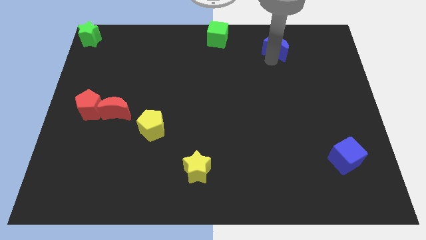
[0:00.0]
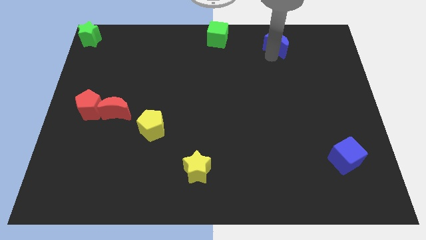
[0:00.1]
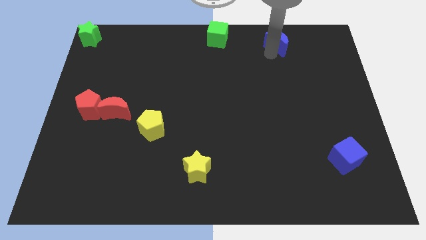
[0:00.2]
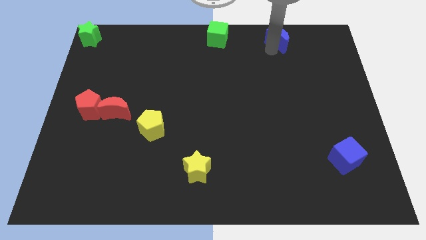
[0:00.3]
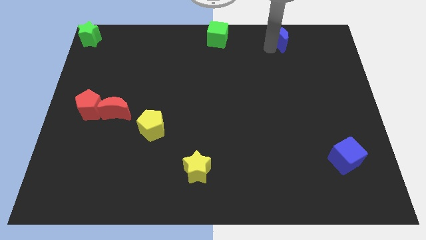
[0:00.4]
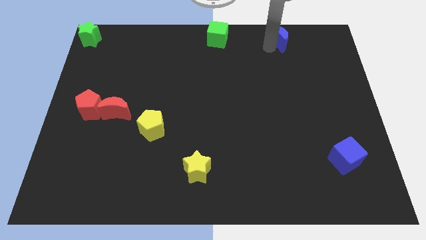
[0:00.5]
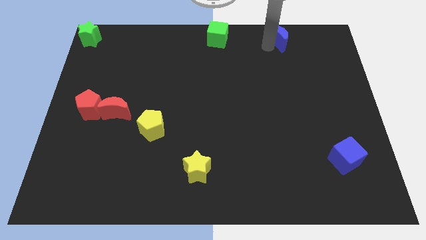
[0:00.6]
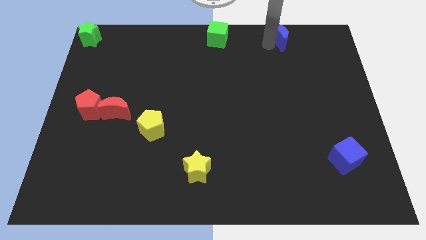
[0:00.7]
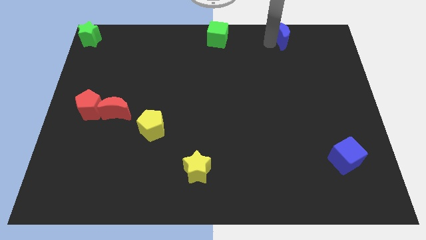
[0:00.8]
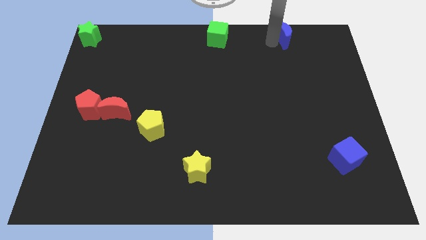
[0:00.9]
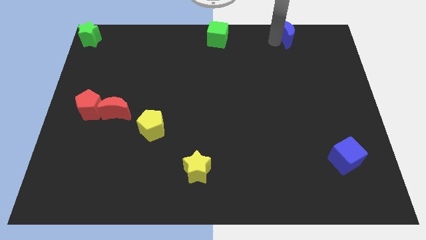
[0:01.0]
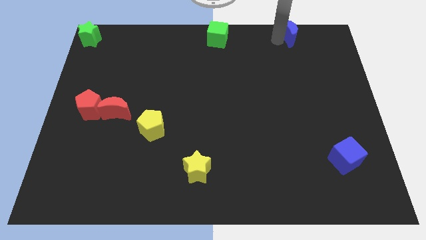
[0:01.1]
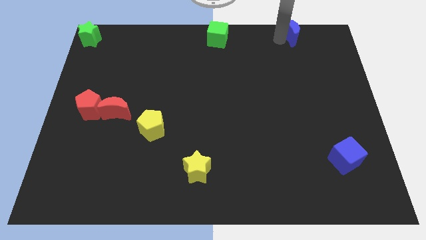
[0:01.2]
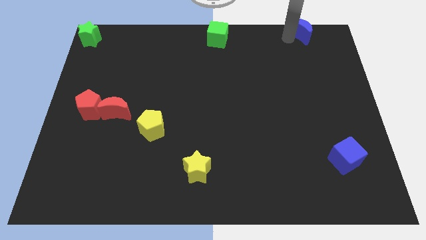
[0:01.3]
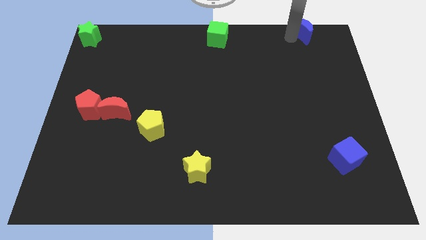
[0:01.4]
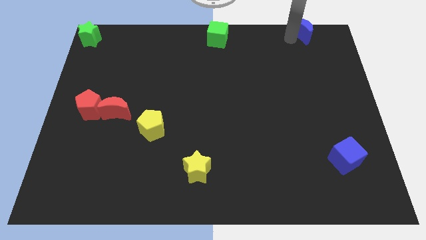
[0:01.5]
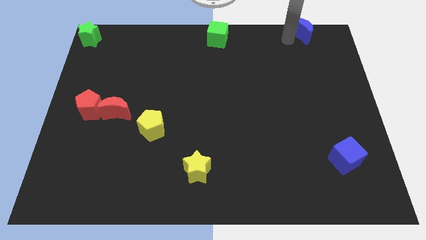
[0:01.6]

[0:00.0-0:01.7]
place the blue crescent towards the top right

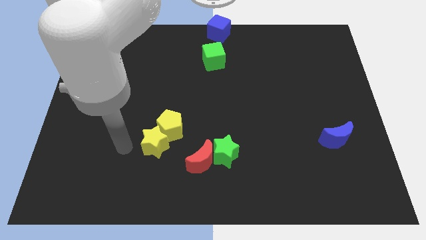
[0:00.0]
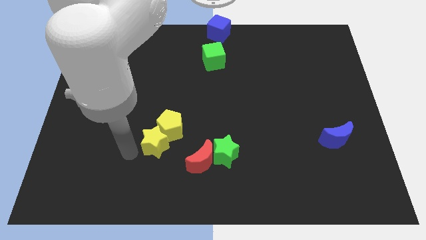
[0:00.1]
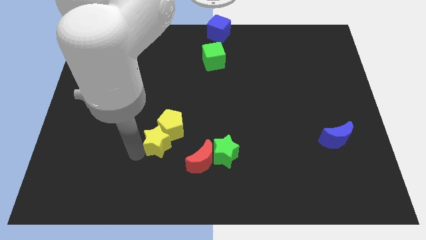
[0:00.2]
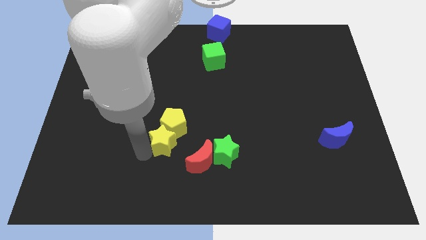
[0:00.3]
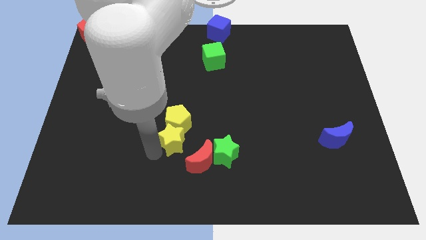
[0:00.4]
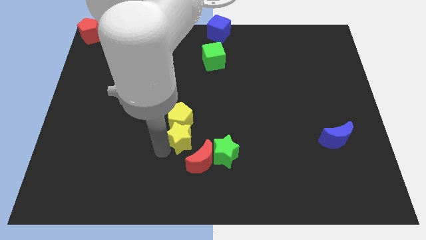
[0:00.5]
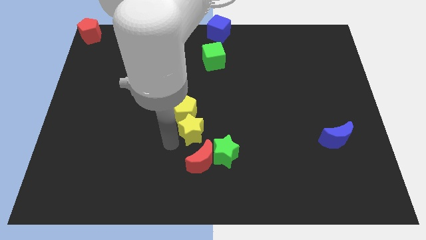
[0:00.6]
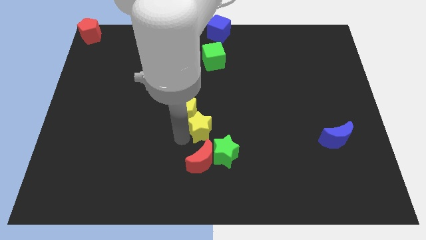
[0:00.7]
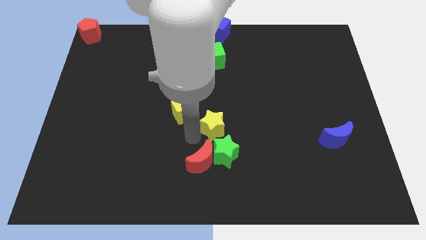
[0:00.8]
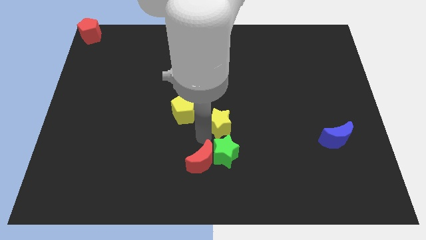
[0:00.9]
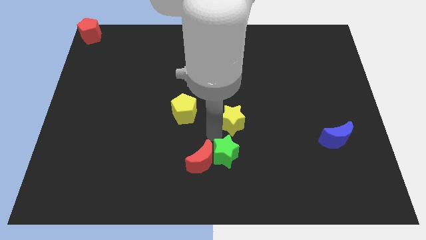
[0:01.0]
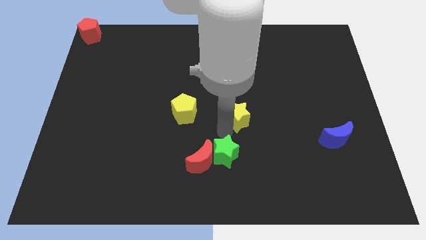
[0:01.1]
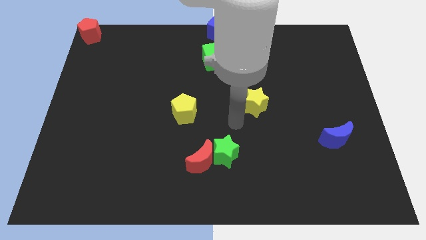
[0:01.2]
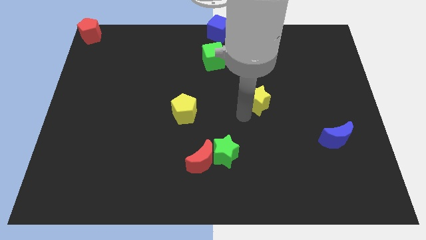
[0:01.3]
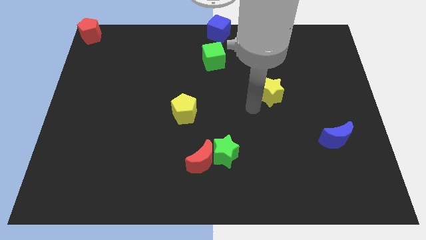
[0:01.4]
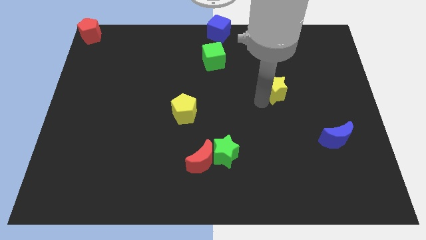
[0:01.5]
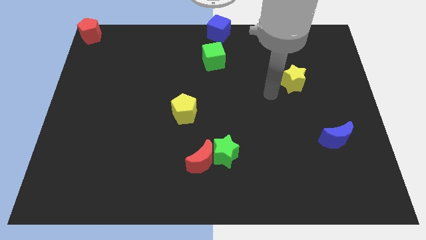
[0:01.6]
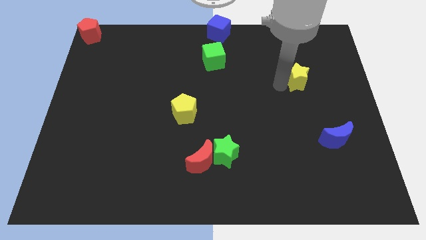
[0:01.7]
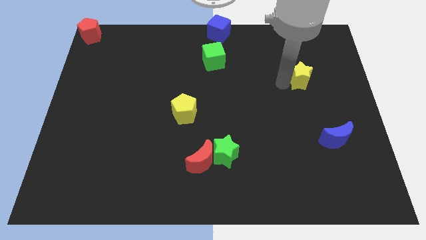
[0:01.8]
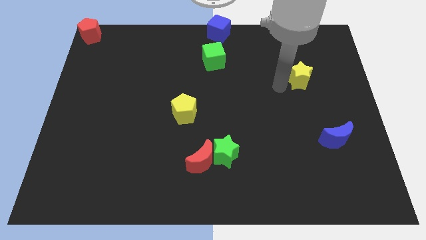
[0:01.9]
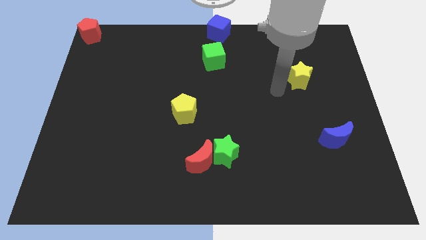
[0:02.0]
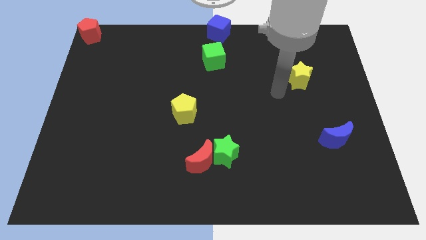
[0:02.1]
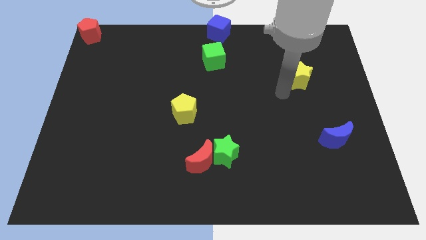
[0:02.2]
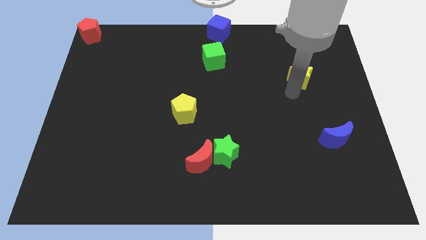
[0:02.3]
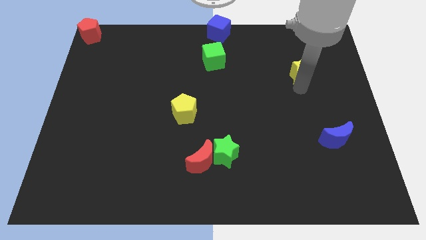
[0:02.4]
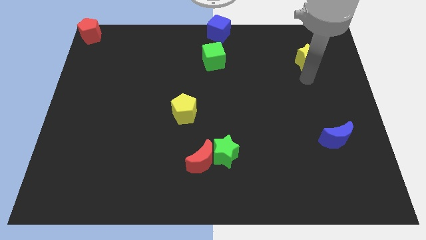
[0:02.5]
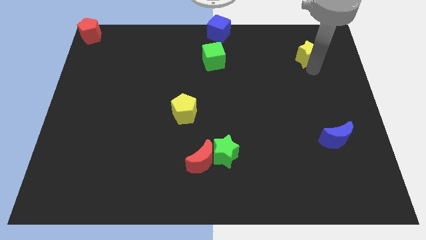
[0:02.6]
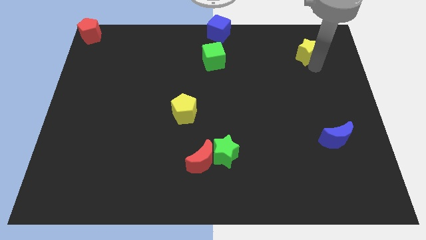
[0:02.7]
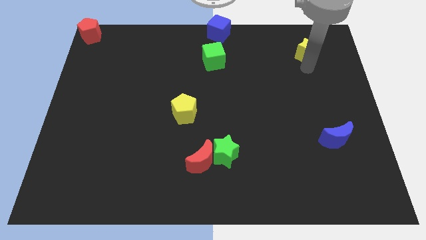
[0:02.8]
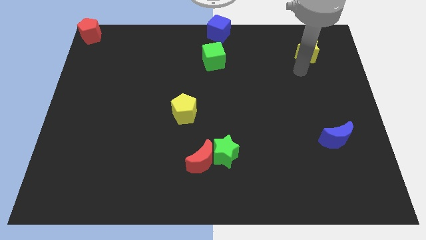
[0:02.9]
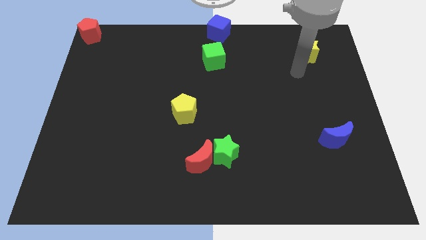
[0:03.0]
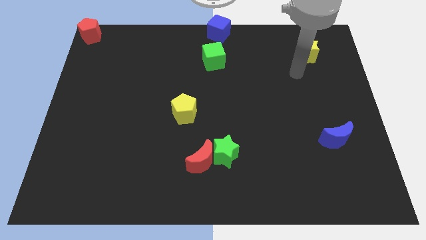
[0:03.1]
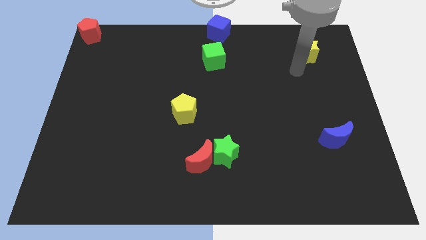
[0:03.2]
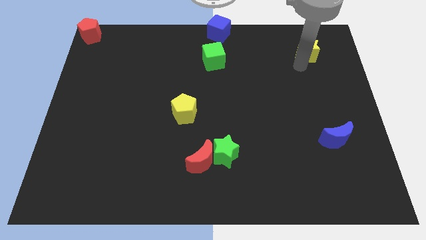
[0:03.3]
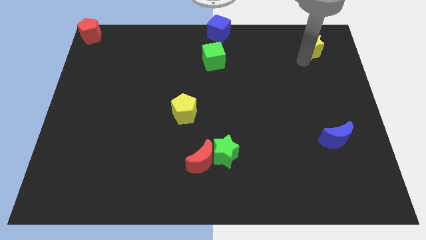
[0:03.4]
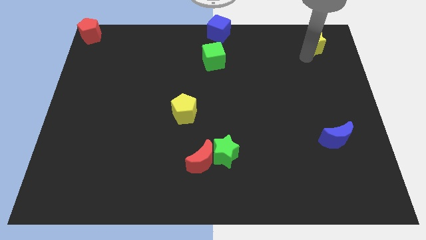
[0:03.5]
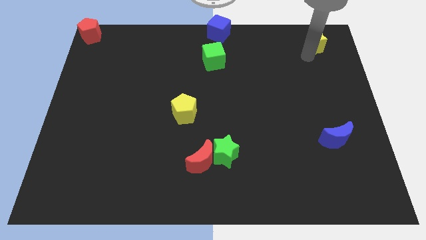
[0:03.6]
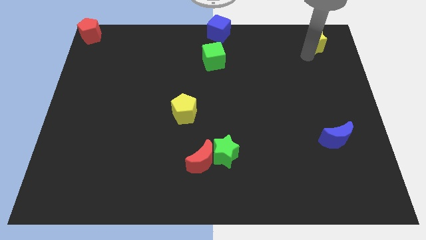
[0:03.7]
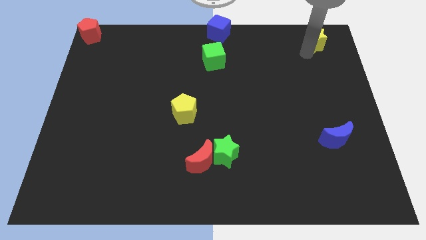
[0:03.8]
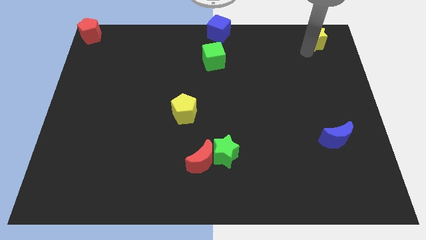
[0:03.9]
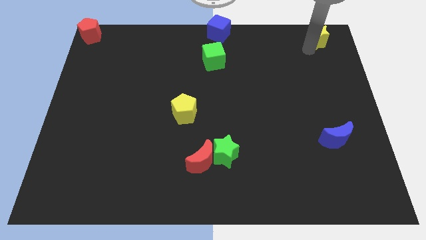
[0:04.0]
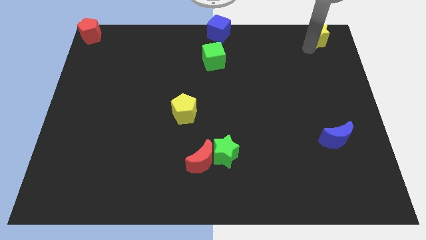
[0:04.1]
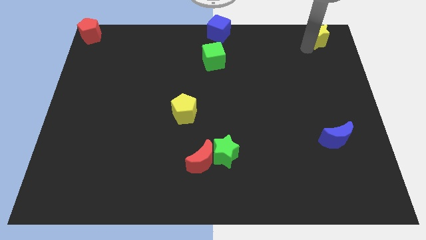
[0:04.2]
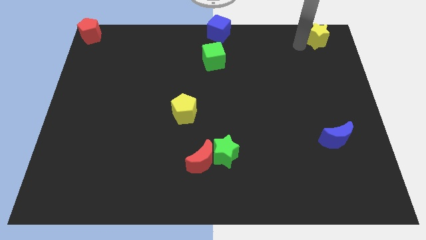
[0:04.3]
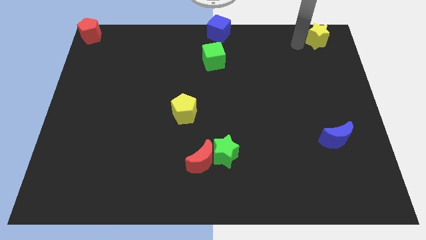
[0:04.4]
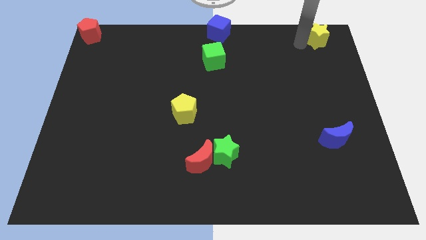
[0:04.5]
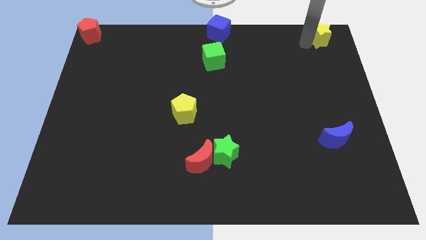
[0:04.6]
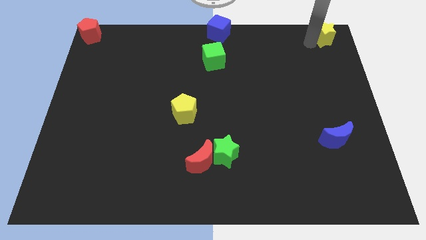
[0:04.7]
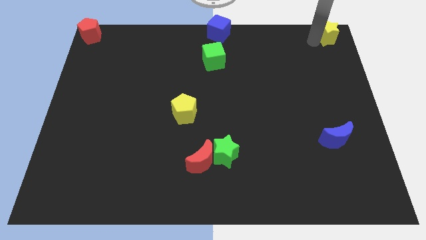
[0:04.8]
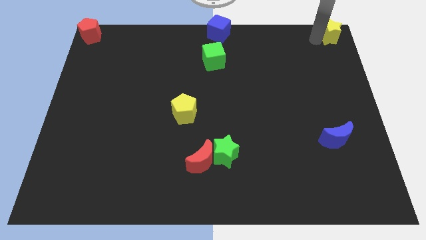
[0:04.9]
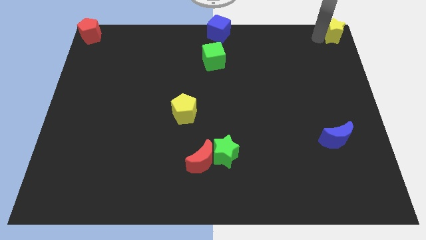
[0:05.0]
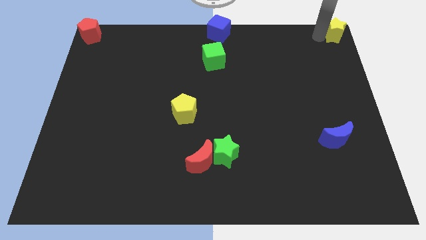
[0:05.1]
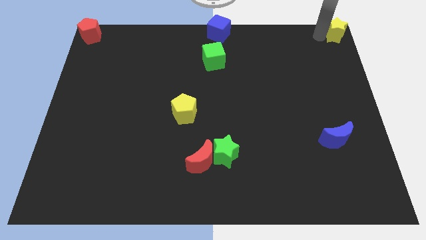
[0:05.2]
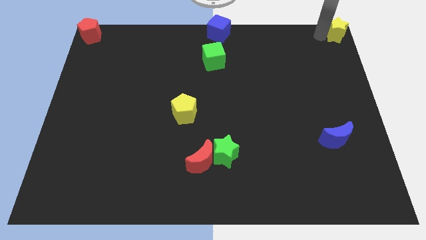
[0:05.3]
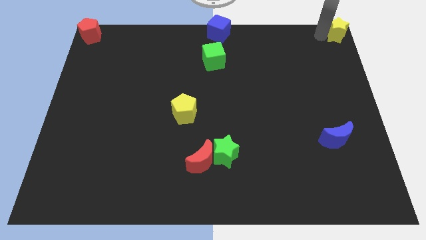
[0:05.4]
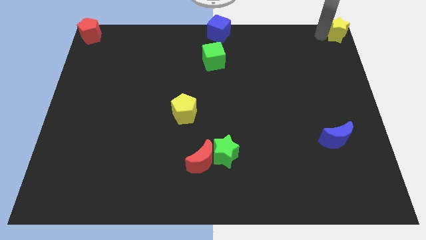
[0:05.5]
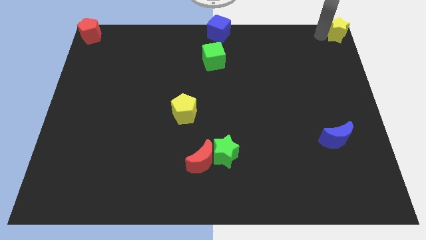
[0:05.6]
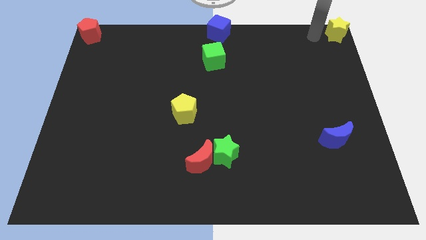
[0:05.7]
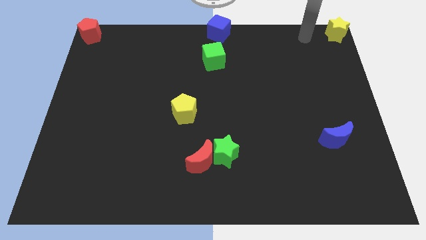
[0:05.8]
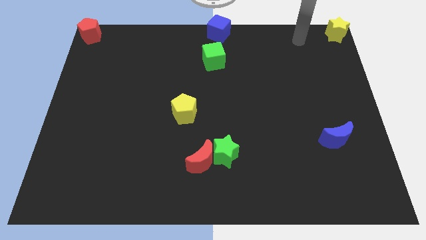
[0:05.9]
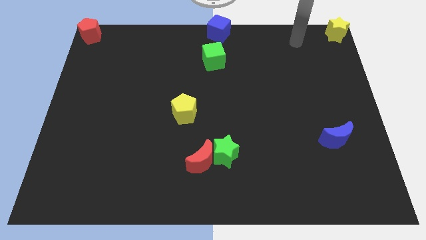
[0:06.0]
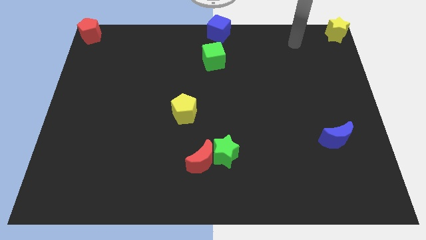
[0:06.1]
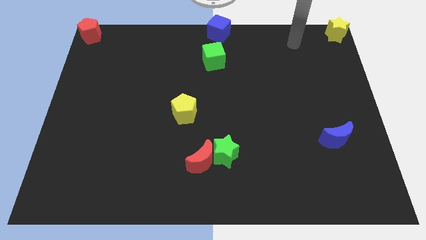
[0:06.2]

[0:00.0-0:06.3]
move the yellow star to the top right corner of the board

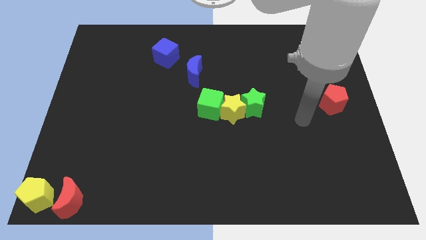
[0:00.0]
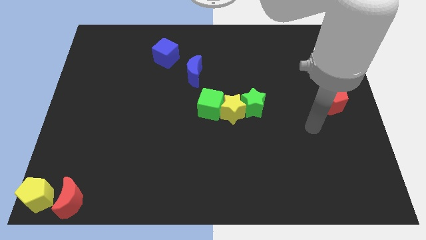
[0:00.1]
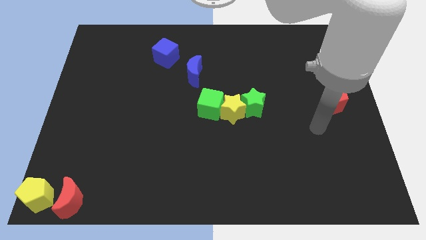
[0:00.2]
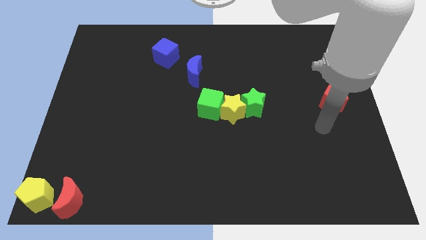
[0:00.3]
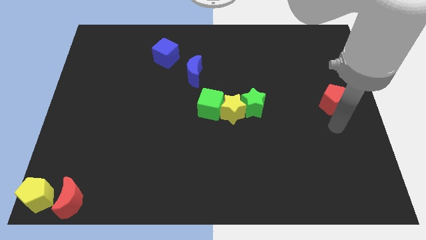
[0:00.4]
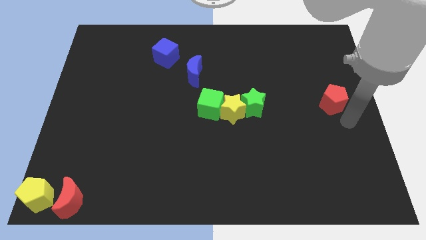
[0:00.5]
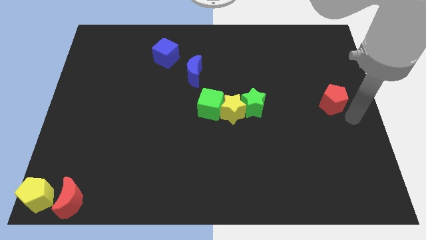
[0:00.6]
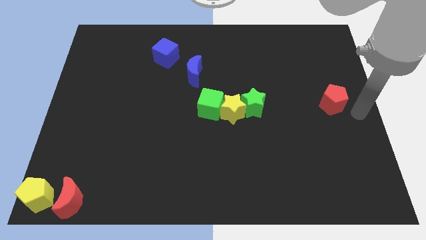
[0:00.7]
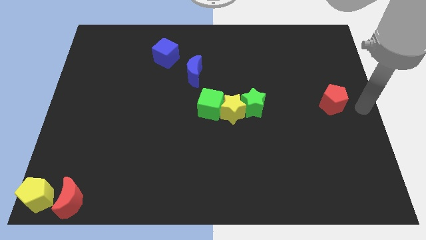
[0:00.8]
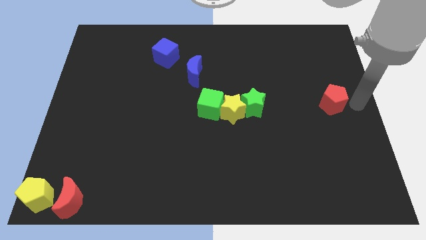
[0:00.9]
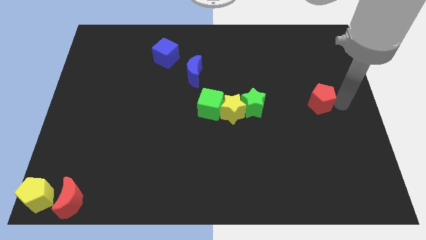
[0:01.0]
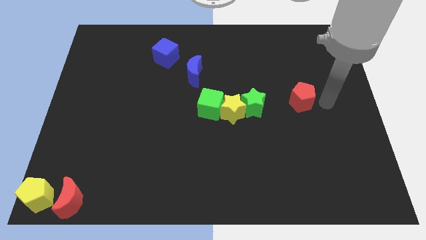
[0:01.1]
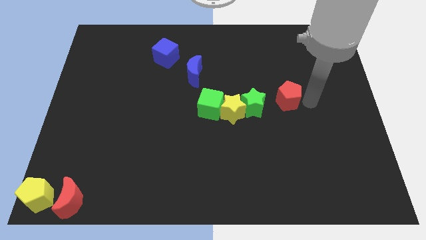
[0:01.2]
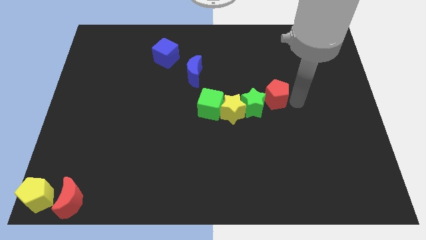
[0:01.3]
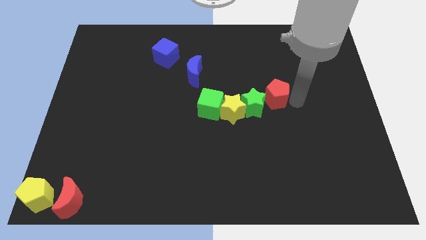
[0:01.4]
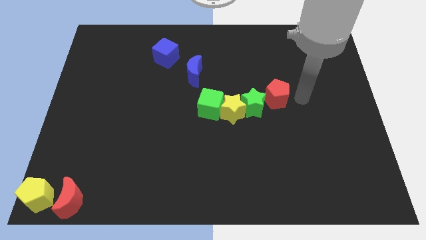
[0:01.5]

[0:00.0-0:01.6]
push the red pentagon into the green star
